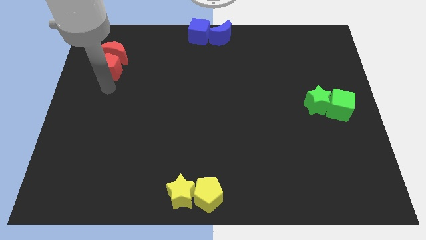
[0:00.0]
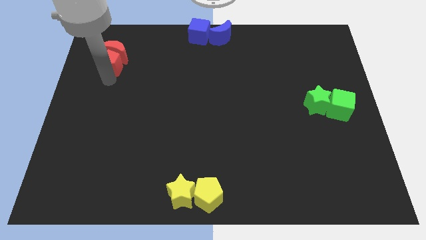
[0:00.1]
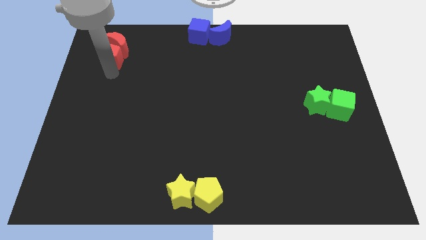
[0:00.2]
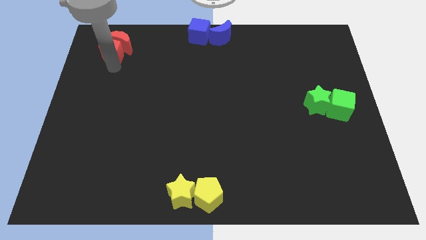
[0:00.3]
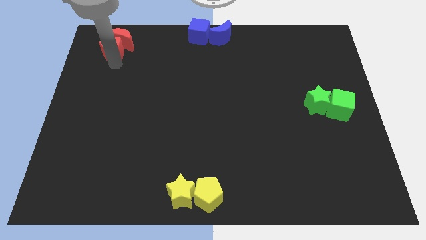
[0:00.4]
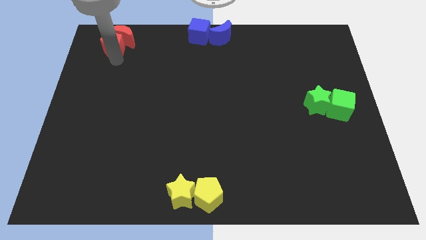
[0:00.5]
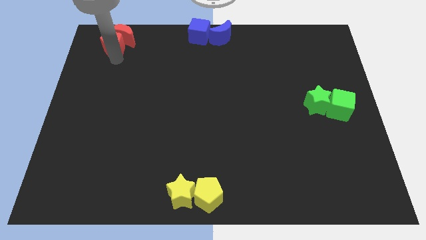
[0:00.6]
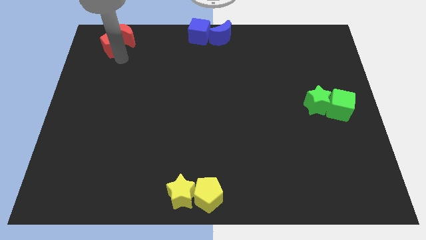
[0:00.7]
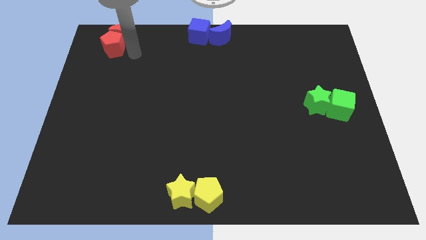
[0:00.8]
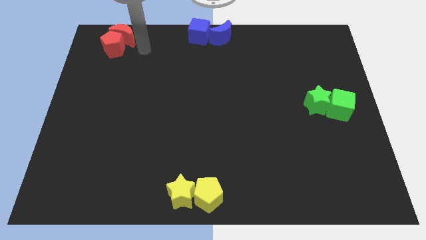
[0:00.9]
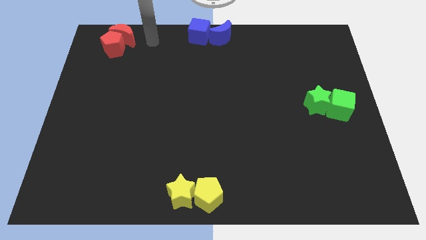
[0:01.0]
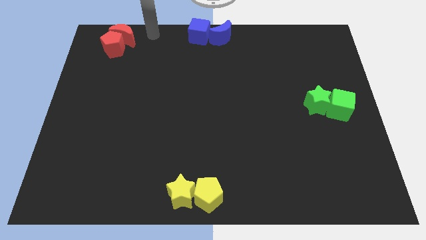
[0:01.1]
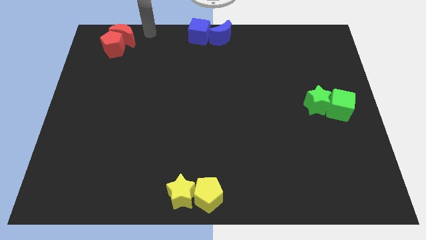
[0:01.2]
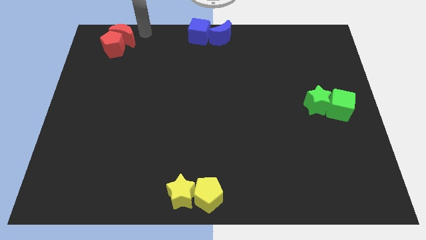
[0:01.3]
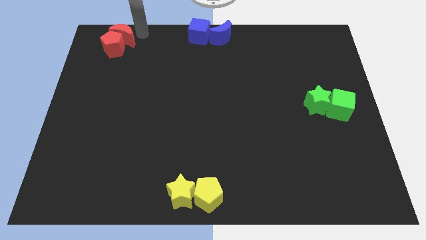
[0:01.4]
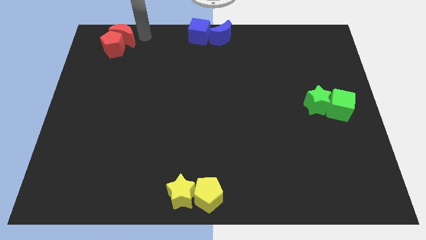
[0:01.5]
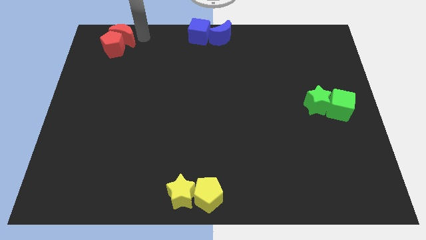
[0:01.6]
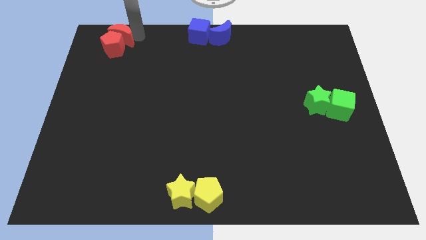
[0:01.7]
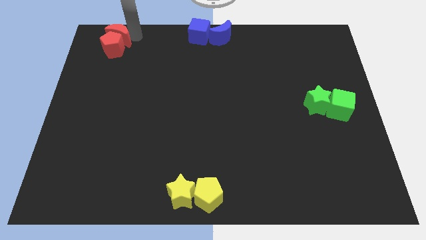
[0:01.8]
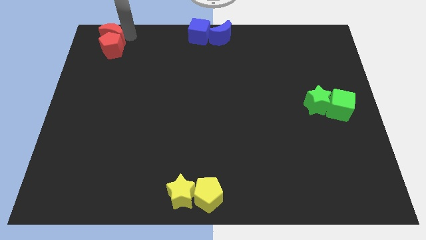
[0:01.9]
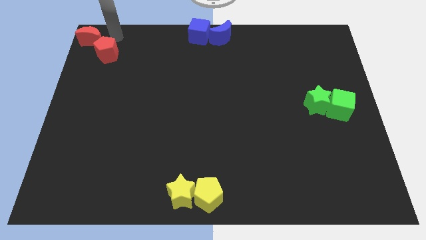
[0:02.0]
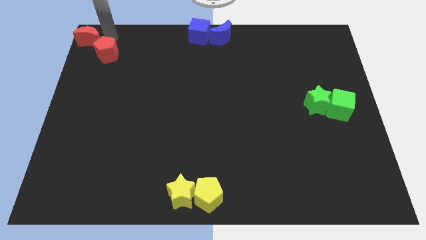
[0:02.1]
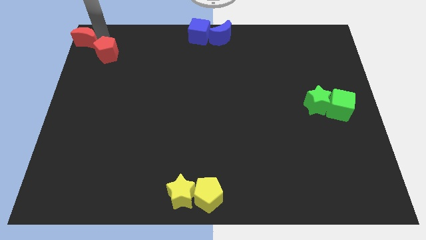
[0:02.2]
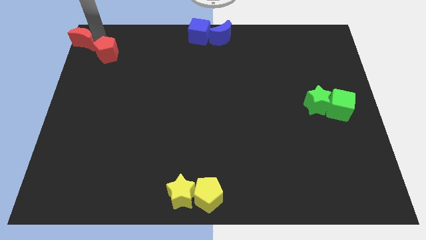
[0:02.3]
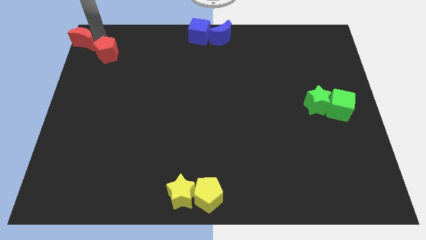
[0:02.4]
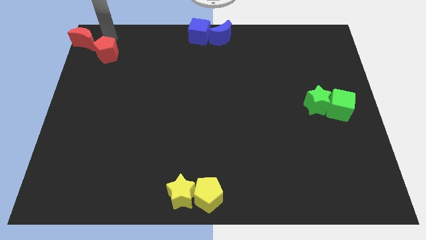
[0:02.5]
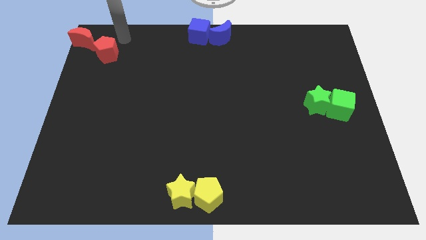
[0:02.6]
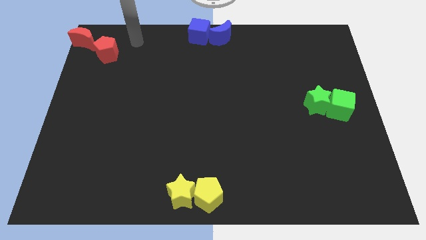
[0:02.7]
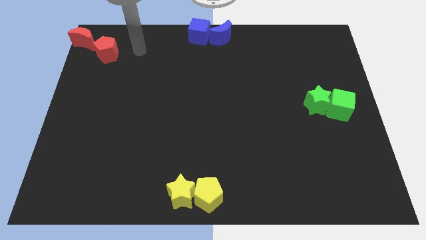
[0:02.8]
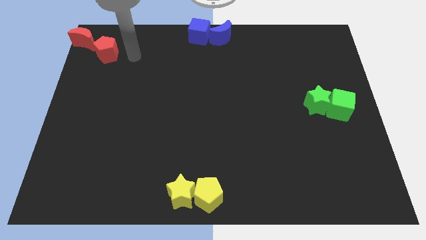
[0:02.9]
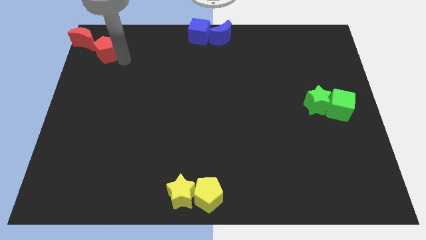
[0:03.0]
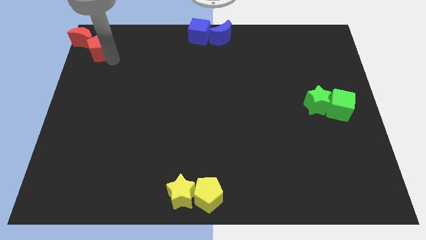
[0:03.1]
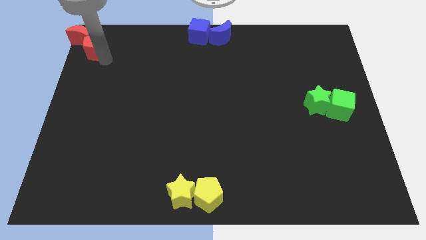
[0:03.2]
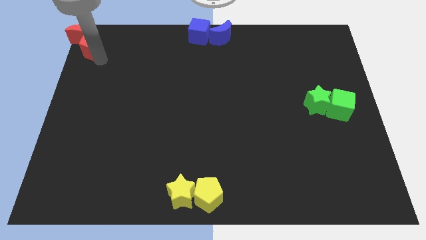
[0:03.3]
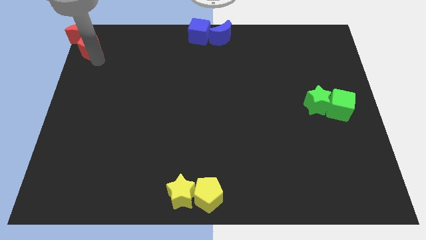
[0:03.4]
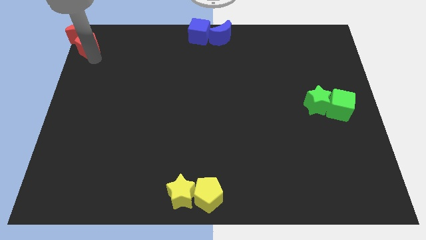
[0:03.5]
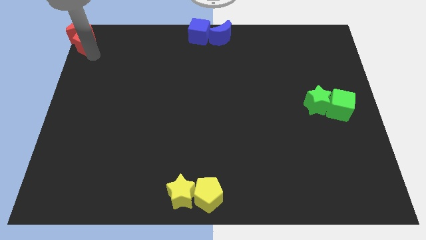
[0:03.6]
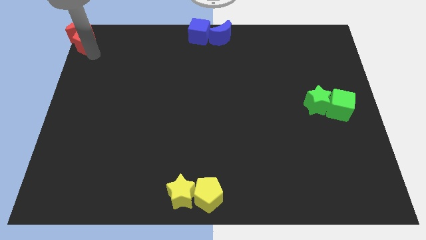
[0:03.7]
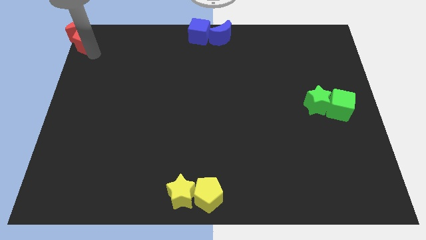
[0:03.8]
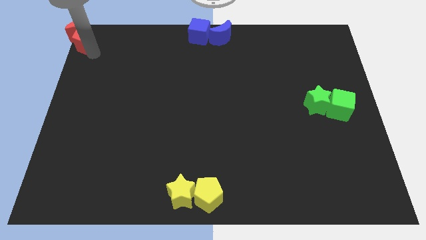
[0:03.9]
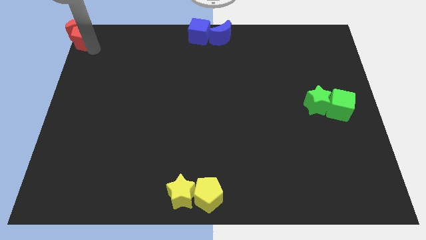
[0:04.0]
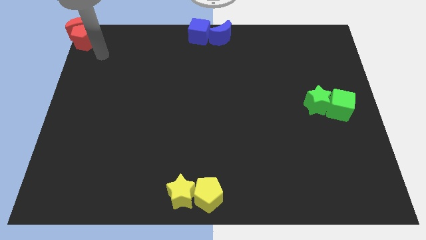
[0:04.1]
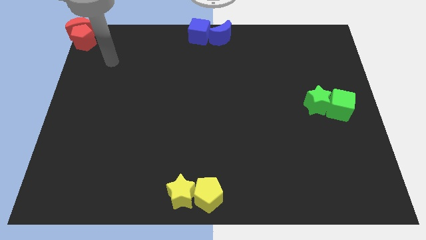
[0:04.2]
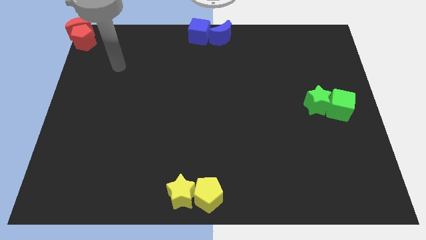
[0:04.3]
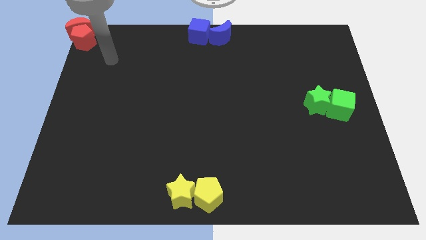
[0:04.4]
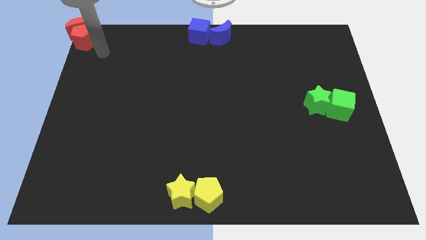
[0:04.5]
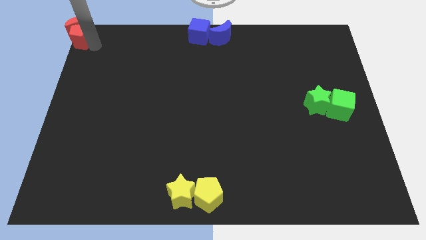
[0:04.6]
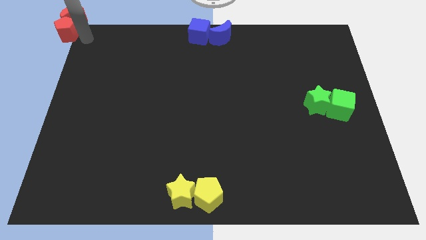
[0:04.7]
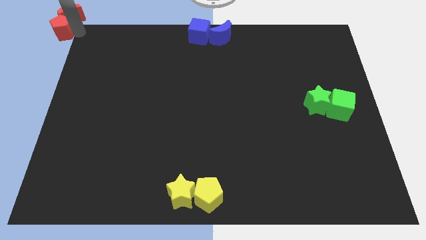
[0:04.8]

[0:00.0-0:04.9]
move the red blocks to the top left corner of the board

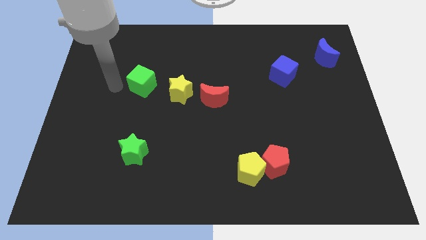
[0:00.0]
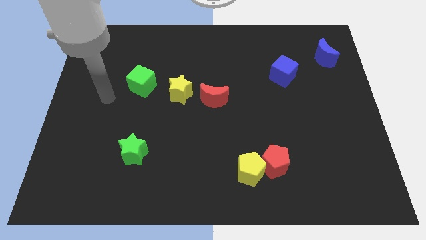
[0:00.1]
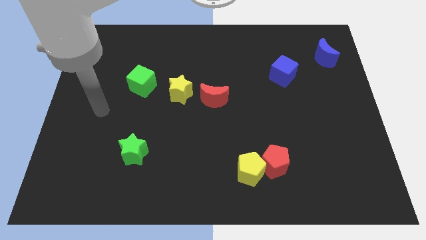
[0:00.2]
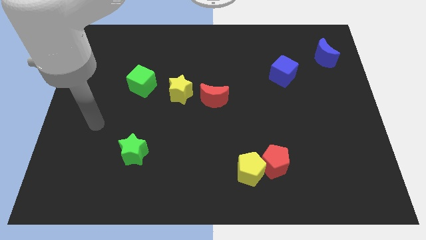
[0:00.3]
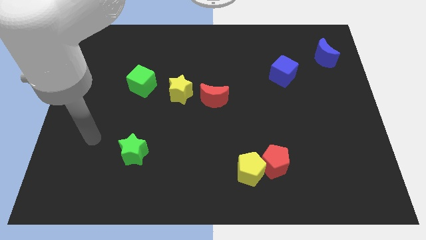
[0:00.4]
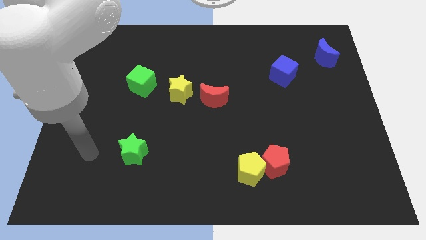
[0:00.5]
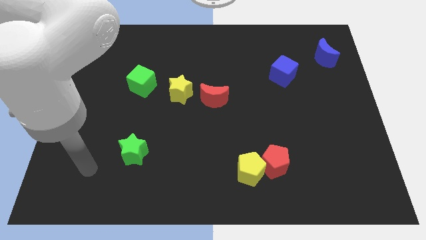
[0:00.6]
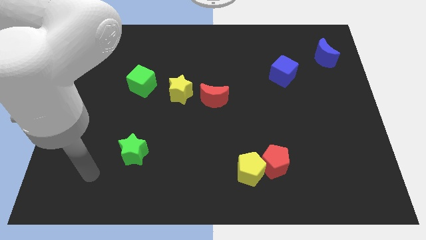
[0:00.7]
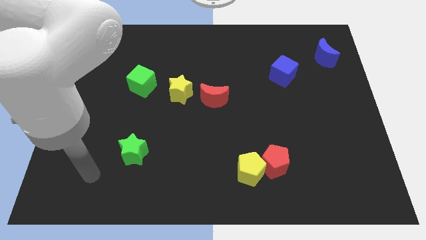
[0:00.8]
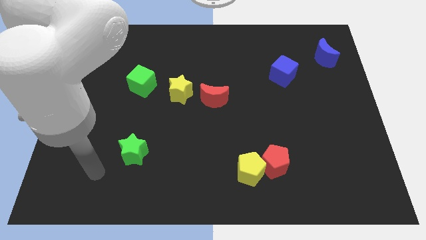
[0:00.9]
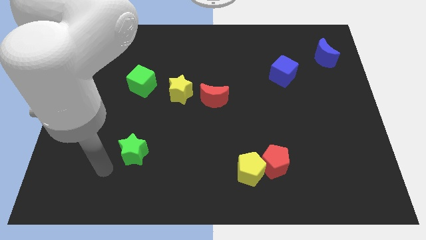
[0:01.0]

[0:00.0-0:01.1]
place your arm left to green star

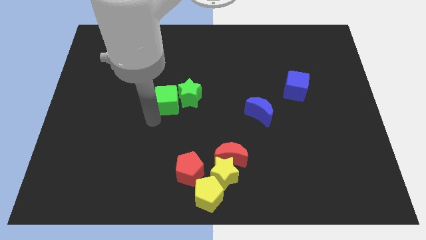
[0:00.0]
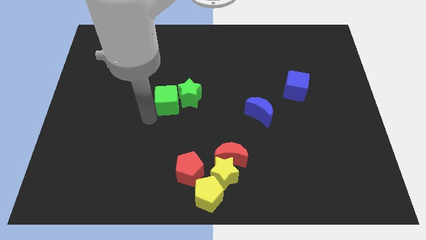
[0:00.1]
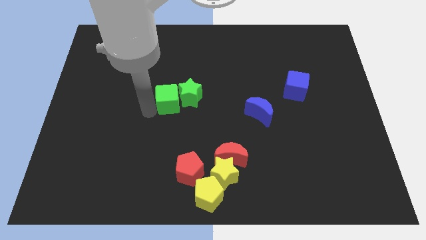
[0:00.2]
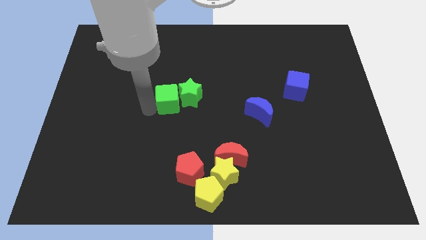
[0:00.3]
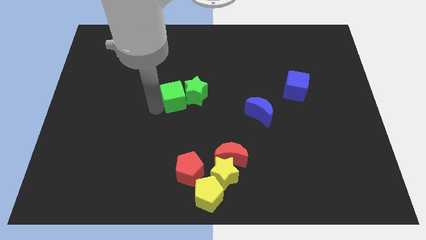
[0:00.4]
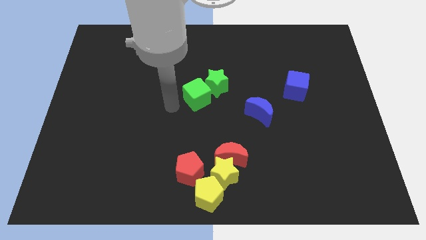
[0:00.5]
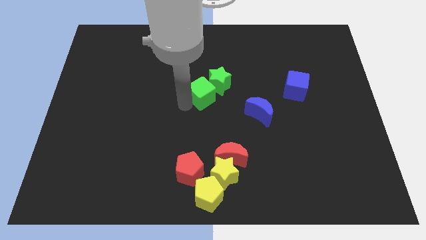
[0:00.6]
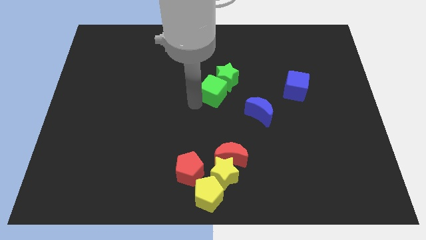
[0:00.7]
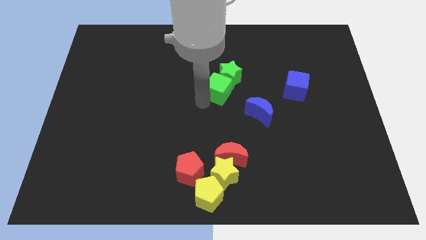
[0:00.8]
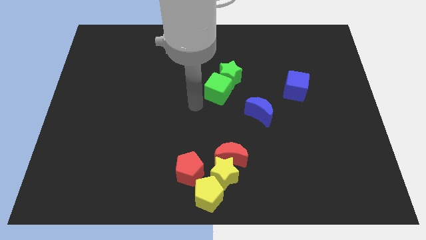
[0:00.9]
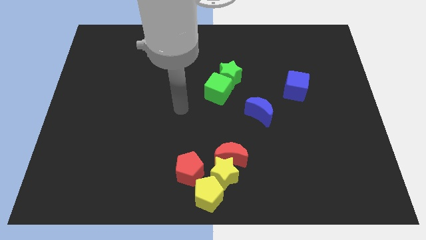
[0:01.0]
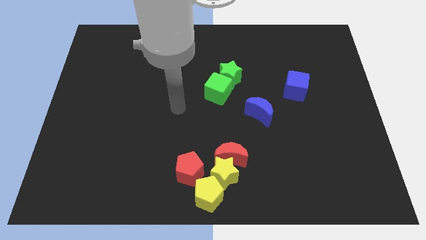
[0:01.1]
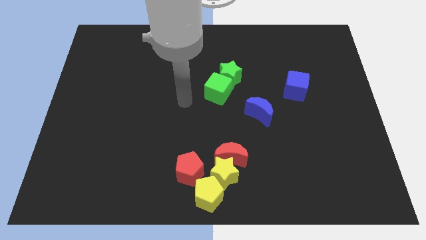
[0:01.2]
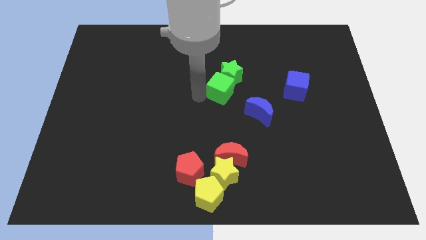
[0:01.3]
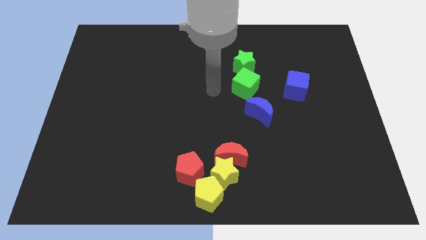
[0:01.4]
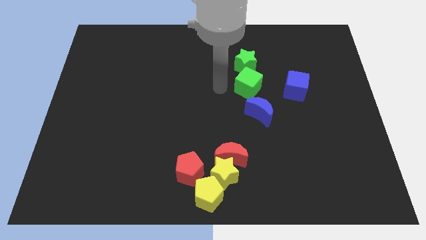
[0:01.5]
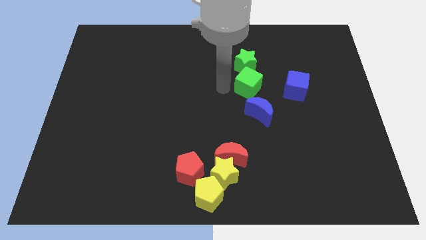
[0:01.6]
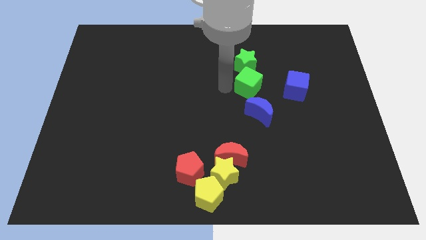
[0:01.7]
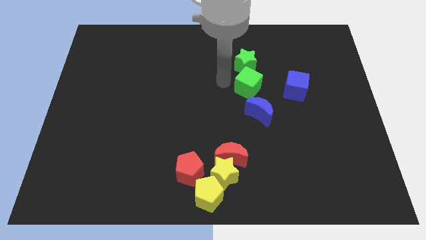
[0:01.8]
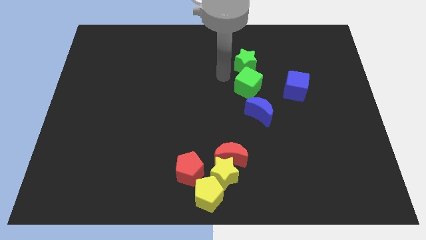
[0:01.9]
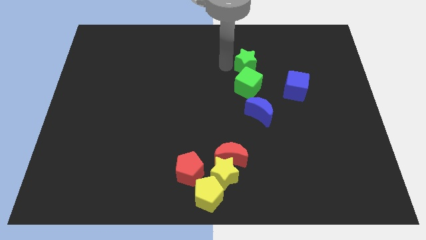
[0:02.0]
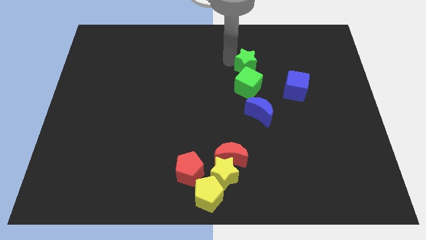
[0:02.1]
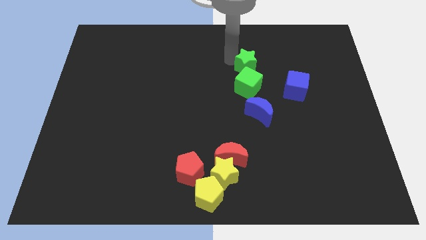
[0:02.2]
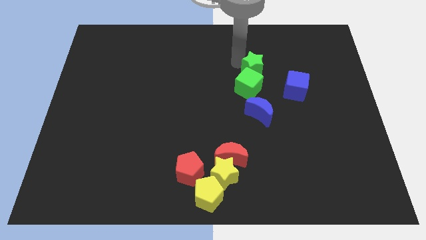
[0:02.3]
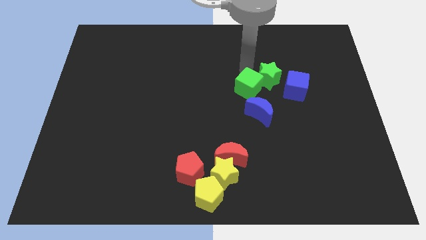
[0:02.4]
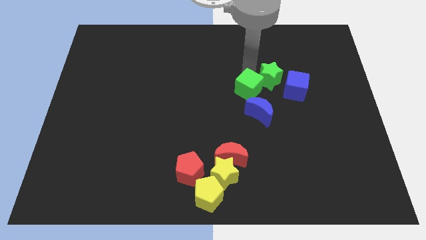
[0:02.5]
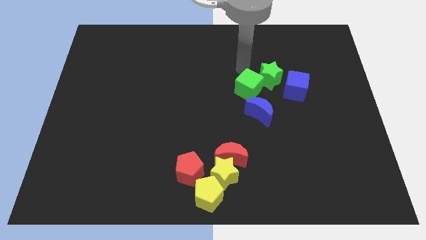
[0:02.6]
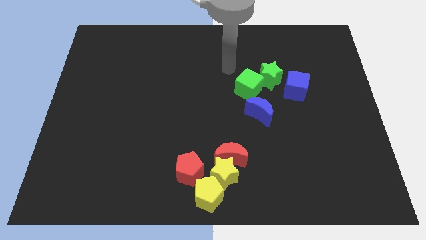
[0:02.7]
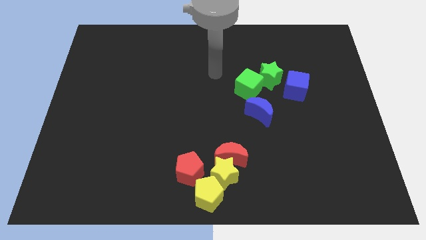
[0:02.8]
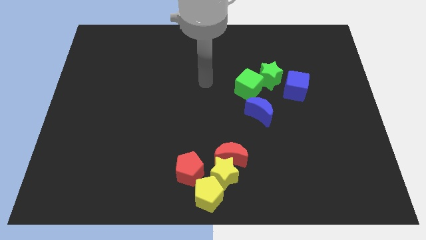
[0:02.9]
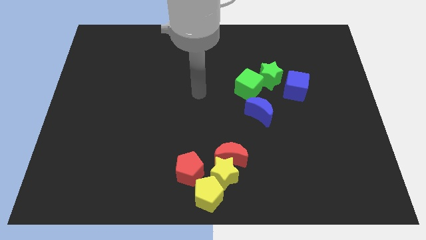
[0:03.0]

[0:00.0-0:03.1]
slide the green blocks to the left of blue cube
